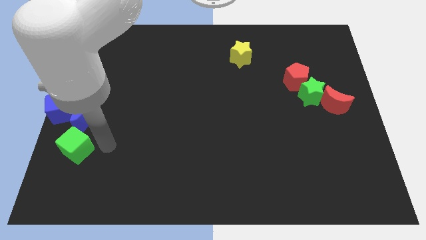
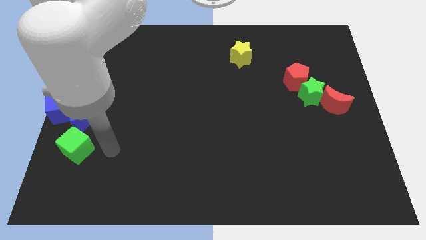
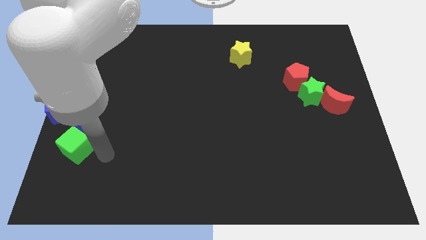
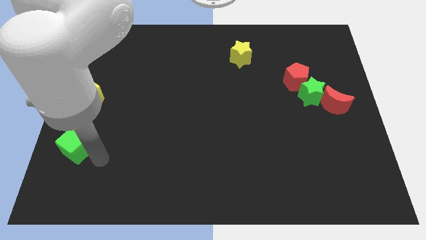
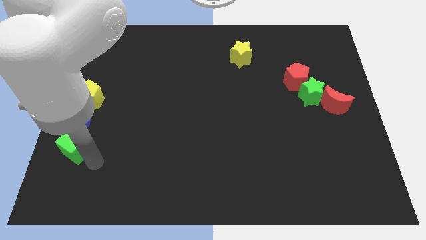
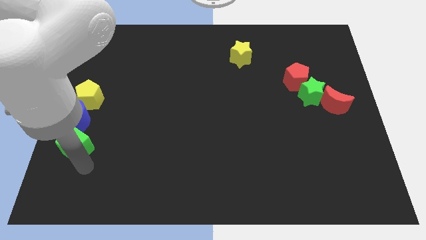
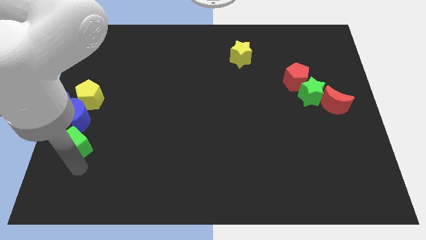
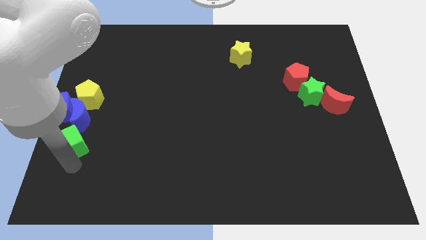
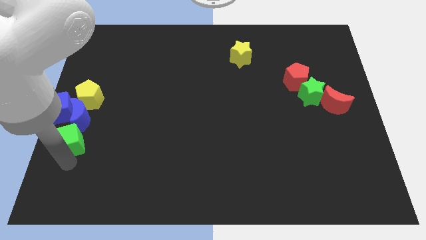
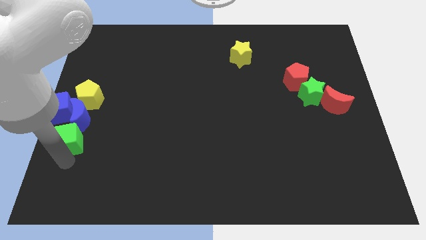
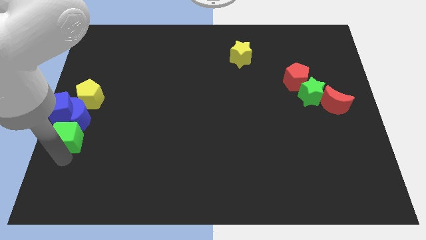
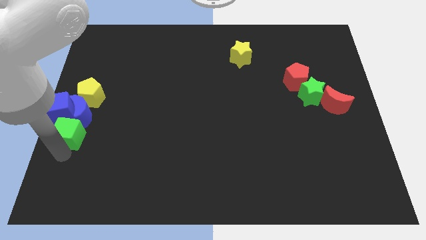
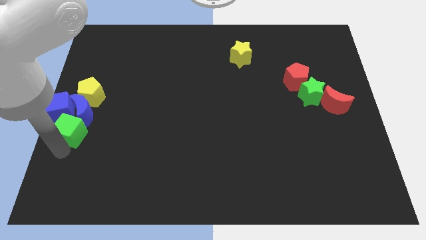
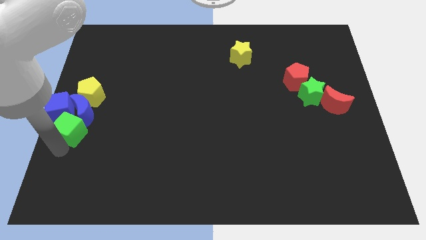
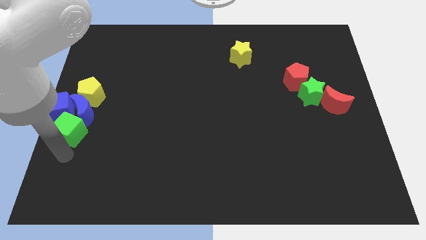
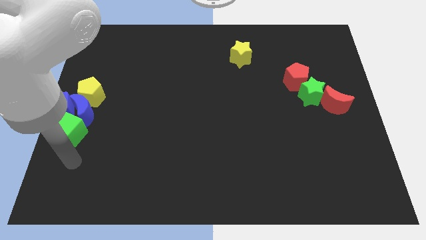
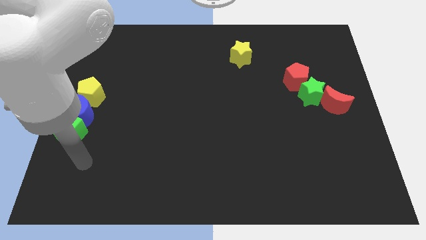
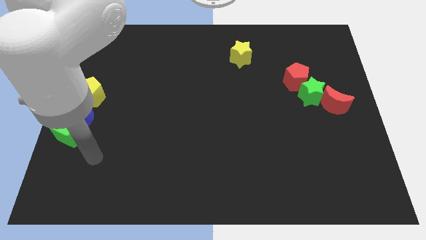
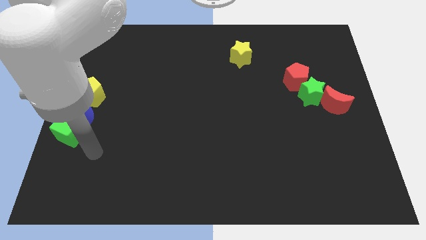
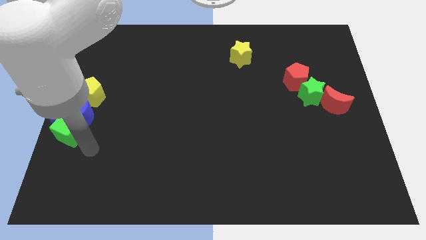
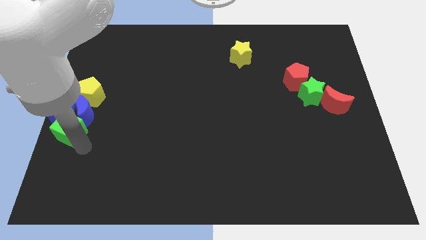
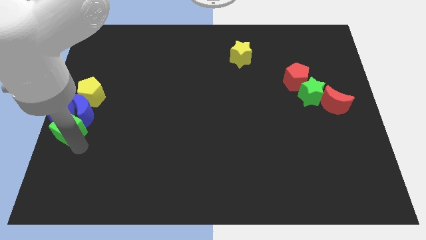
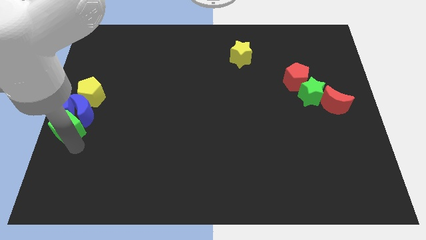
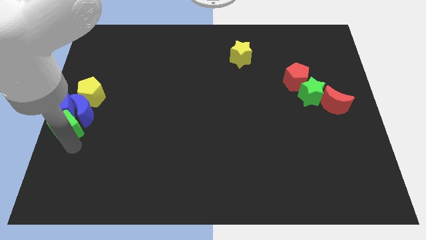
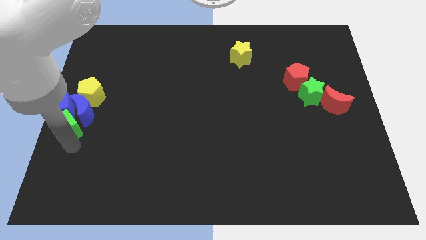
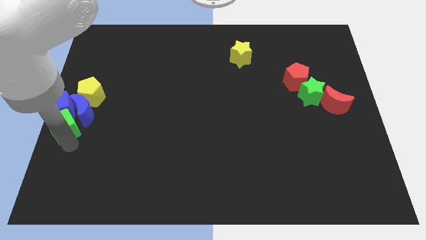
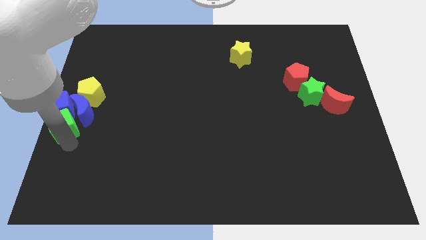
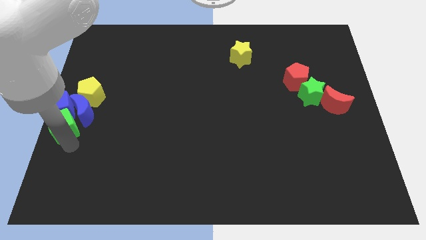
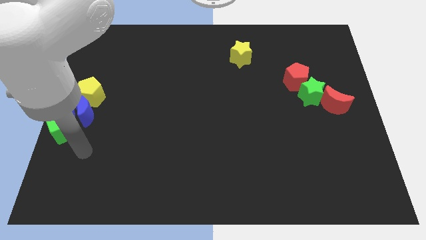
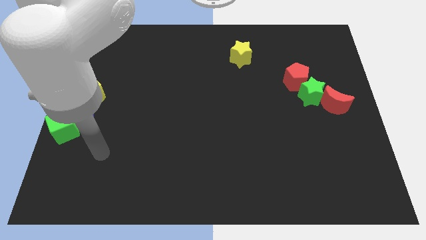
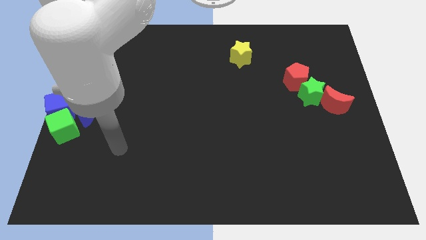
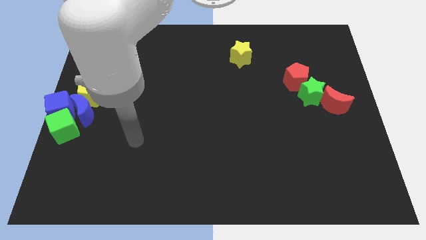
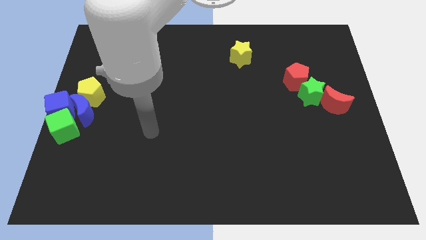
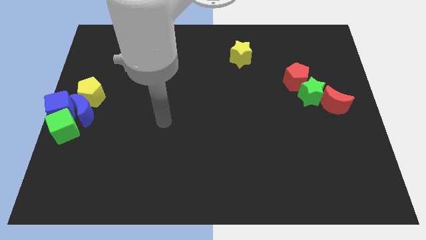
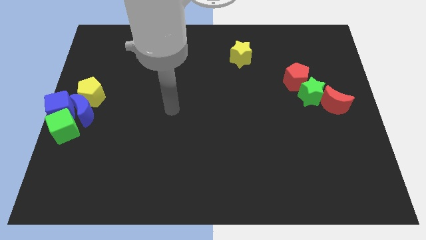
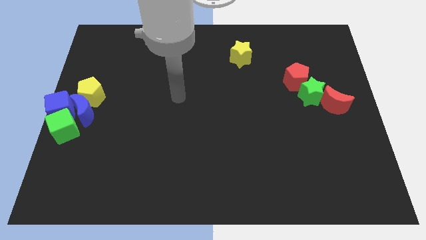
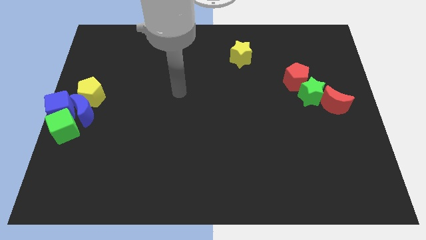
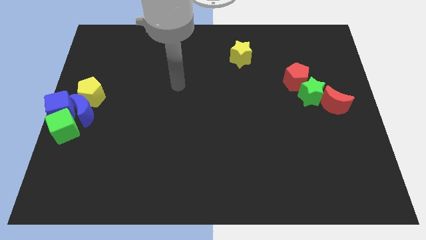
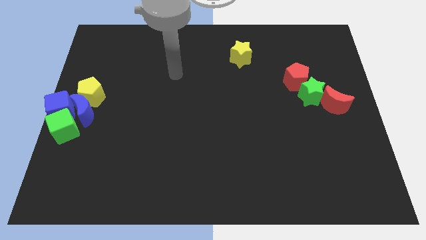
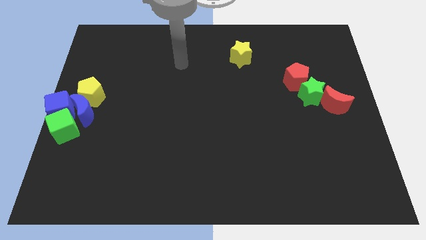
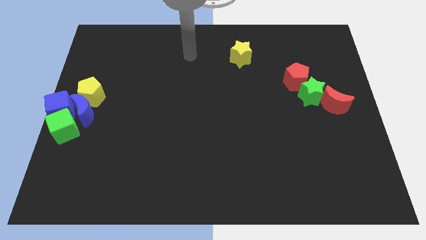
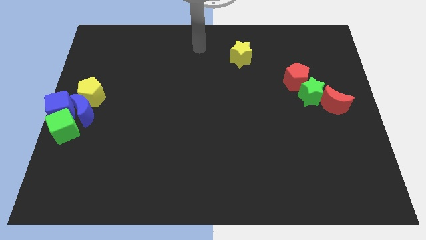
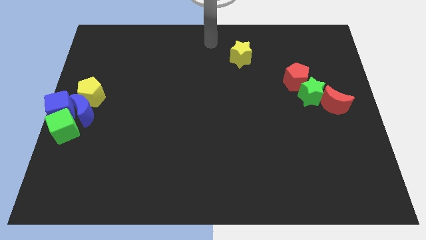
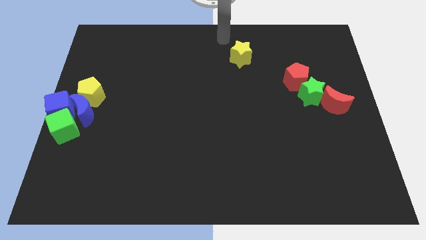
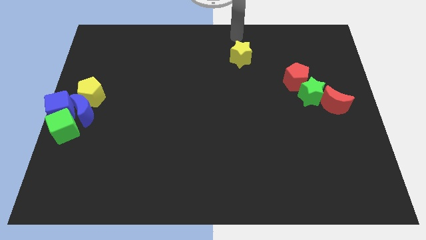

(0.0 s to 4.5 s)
add the green cube to the group of blocks at the left center of the board

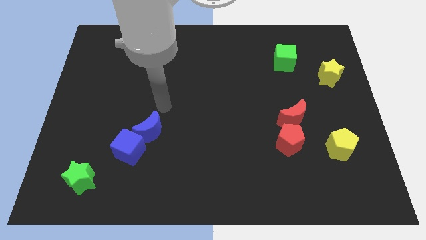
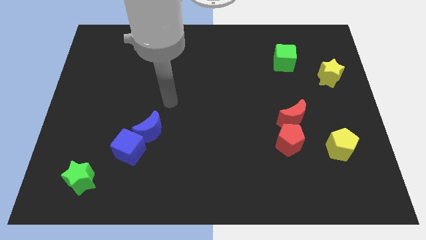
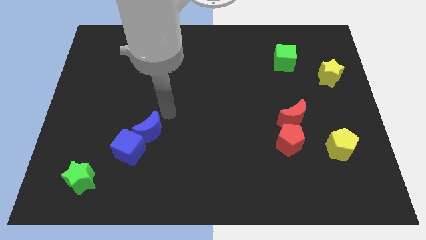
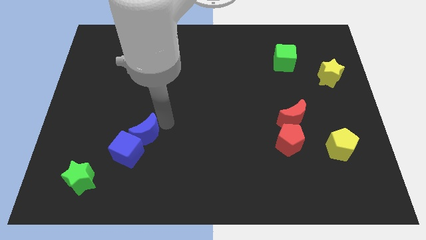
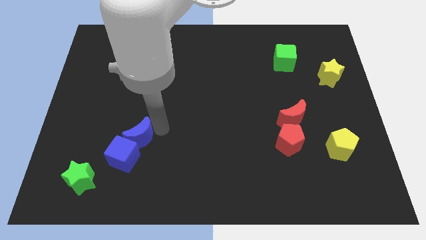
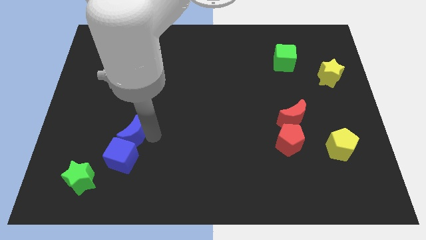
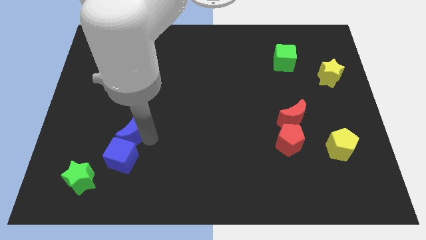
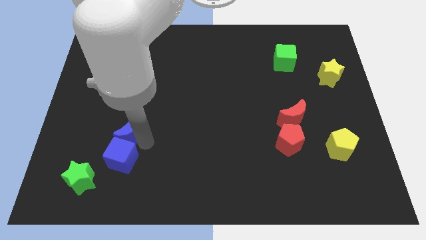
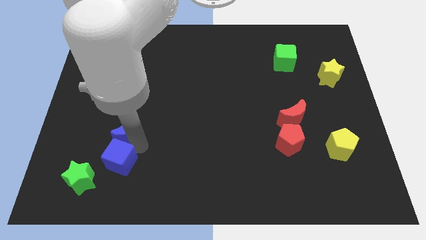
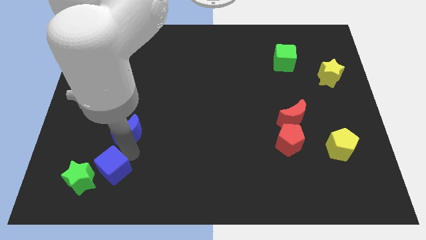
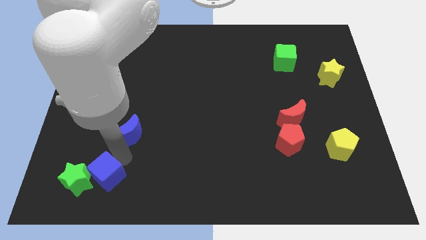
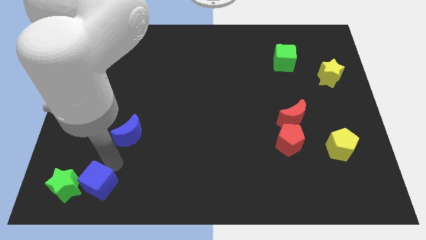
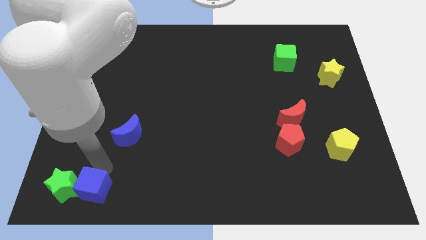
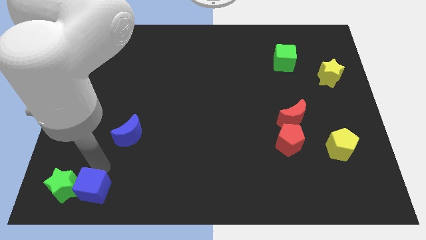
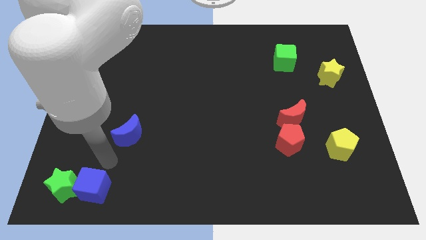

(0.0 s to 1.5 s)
place the blue cube right to green star

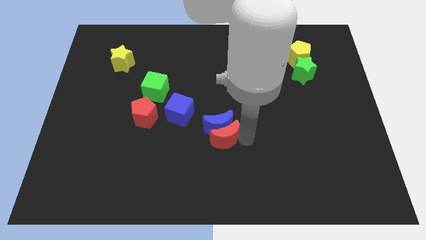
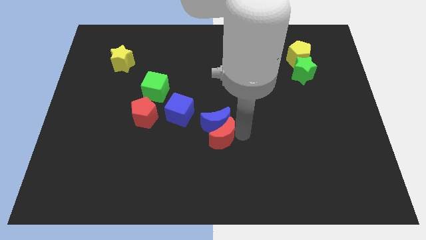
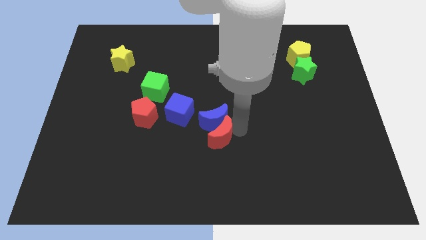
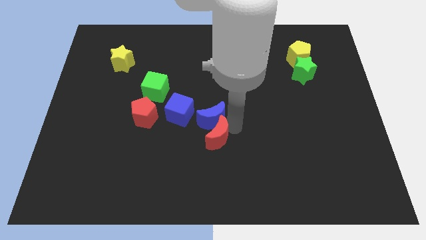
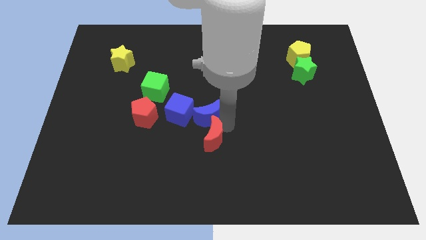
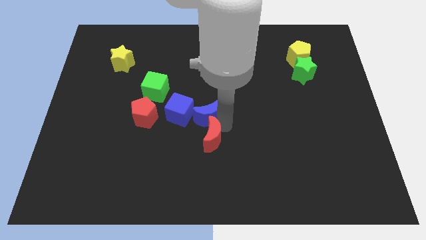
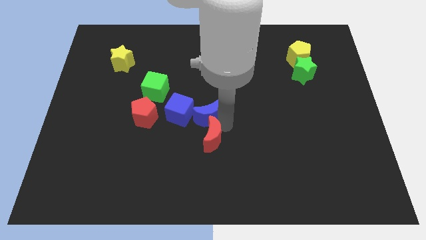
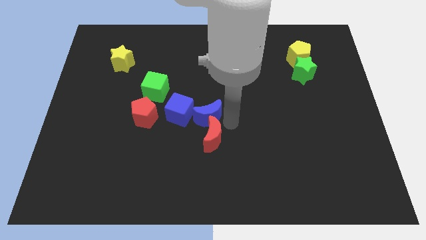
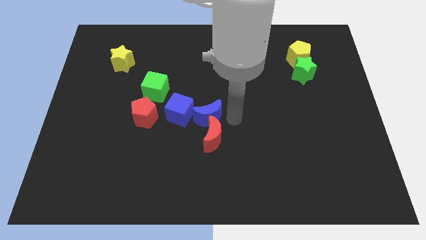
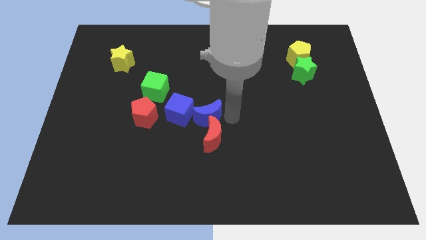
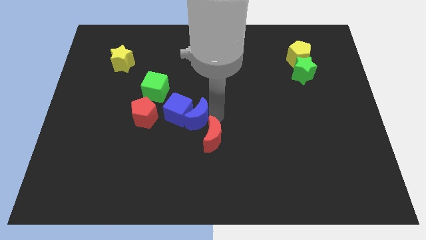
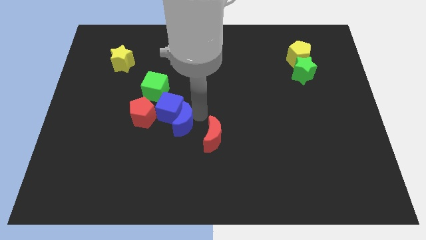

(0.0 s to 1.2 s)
push the blue crescent into the blue cube

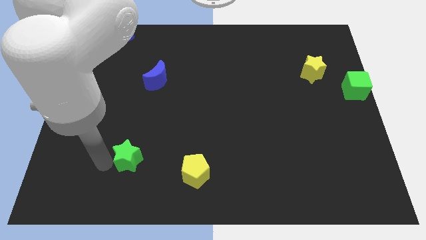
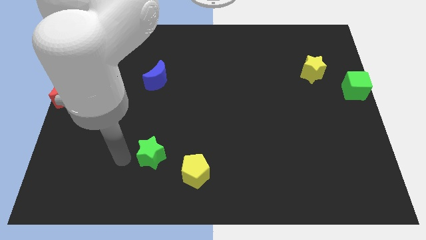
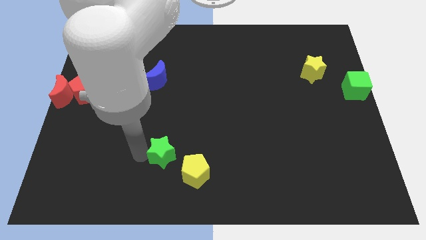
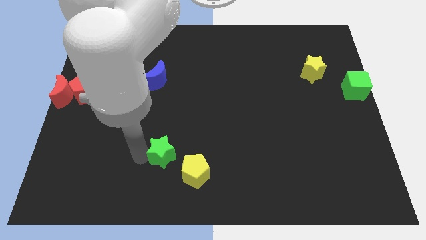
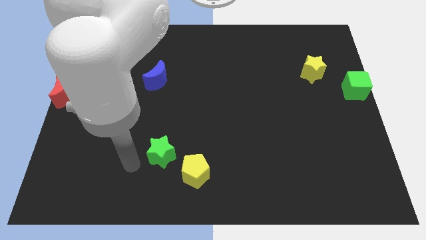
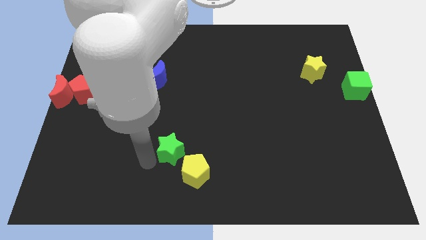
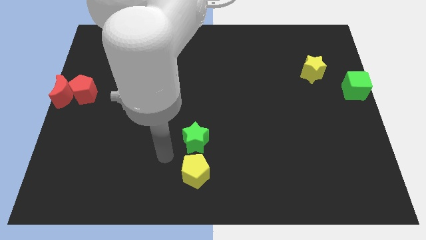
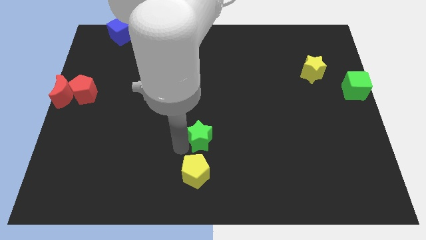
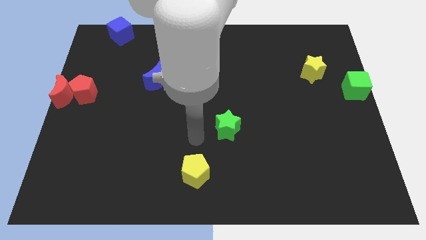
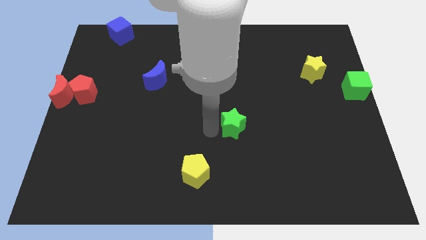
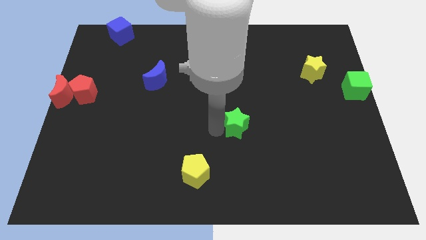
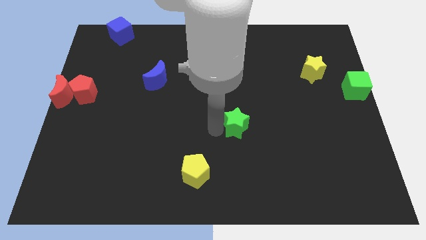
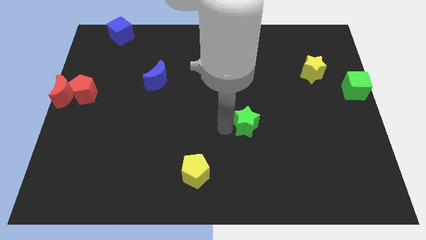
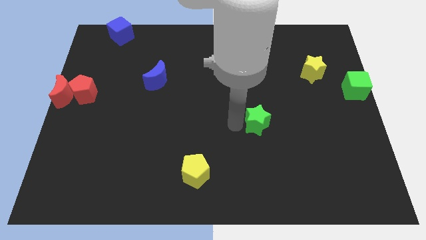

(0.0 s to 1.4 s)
place the green star in between the yellow star and yellow pentagon

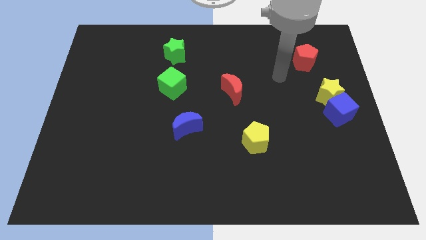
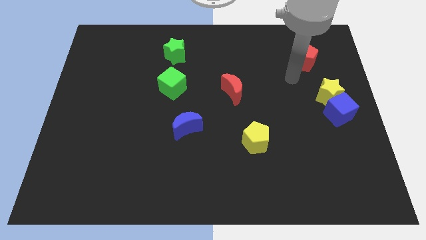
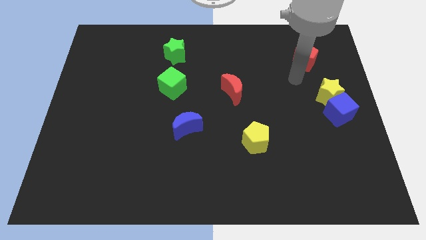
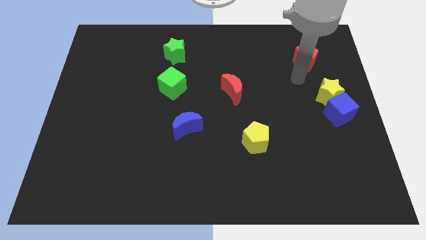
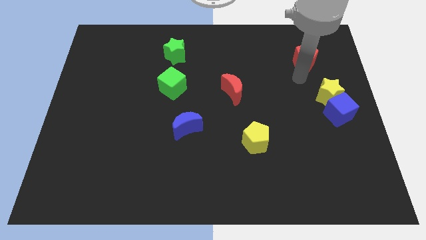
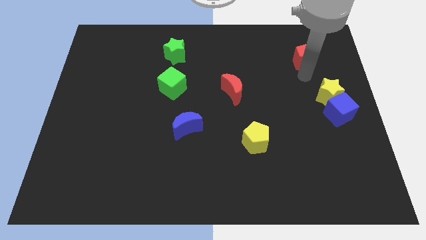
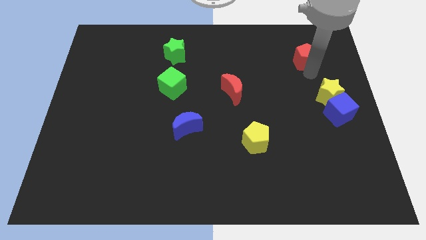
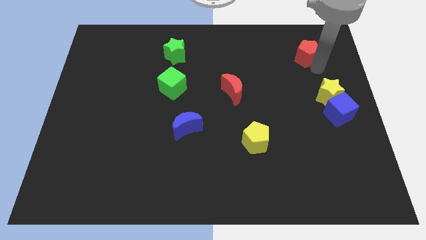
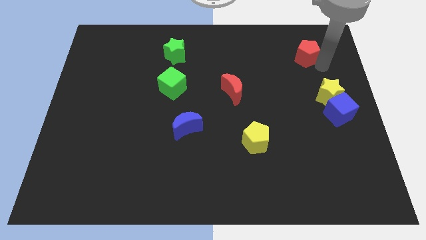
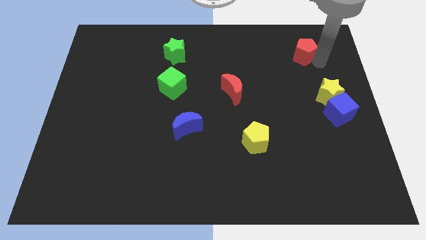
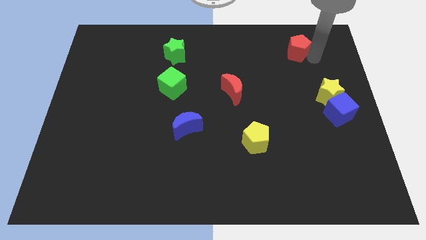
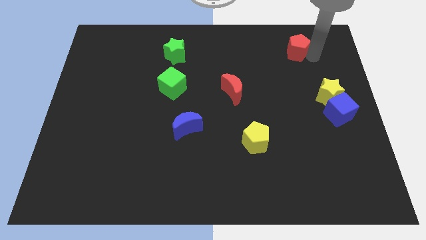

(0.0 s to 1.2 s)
move the red pentagon up slightly
